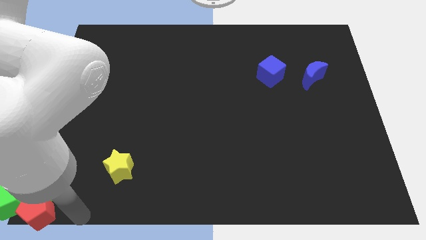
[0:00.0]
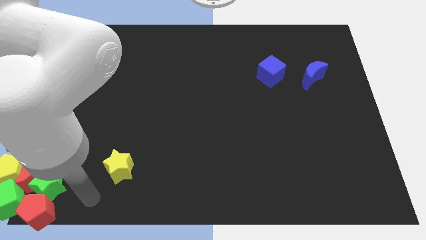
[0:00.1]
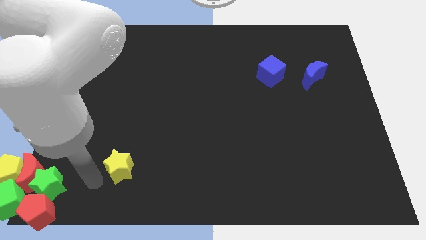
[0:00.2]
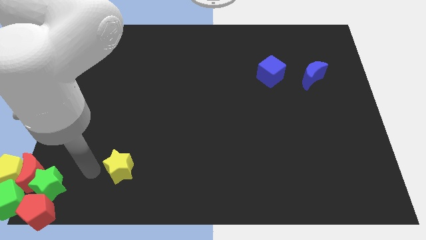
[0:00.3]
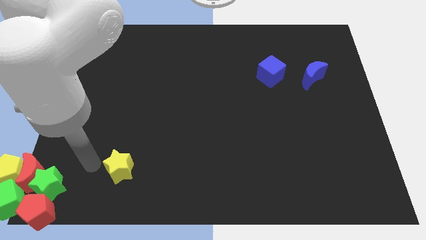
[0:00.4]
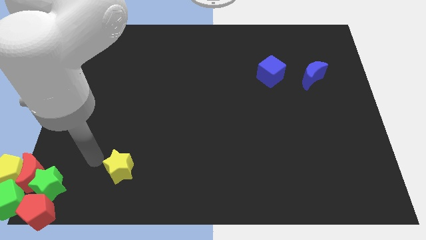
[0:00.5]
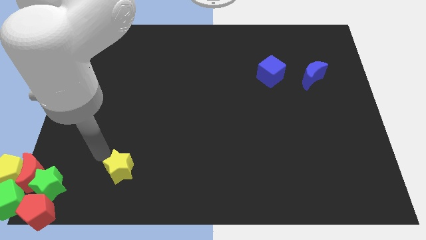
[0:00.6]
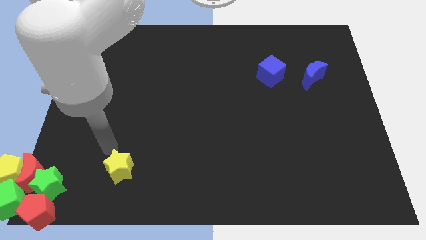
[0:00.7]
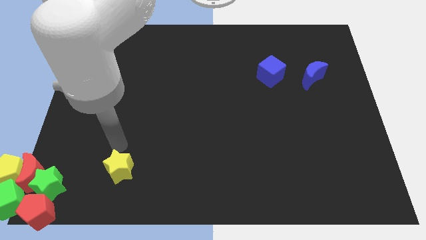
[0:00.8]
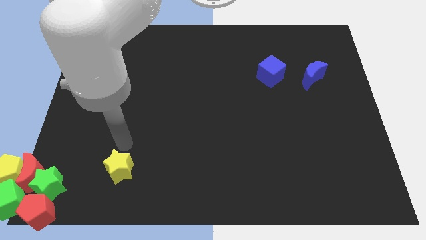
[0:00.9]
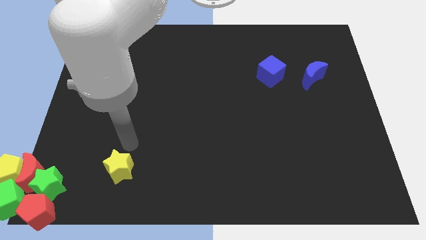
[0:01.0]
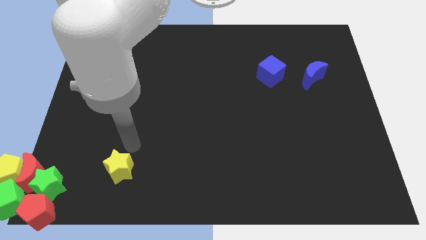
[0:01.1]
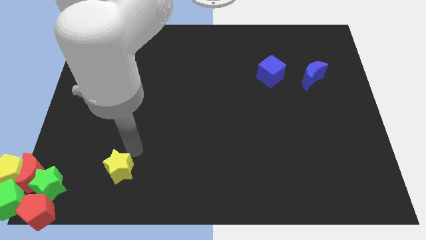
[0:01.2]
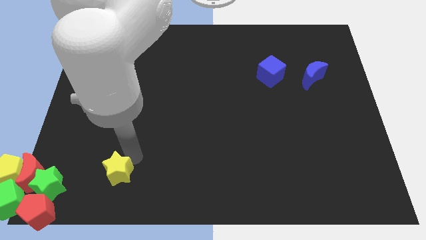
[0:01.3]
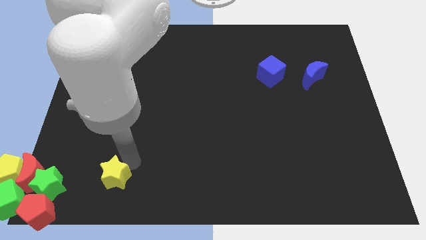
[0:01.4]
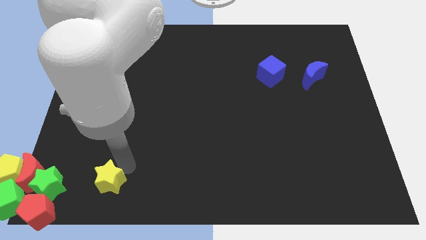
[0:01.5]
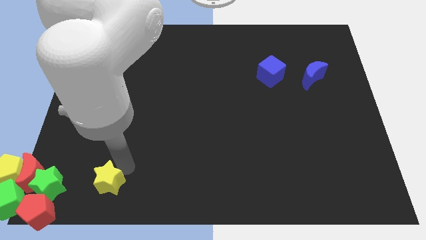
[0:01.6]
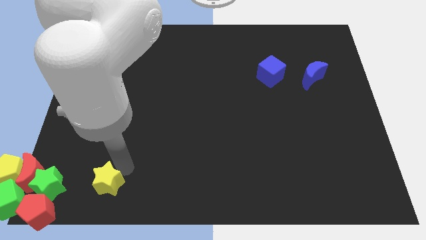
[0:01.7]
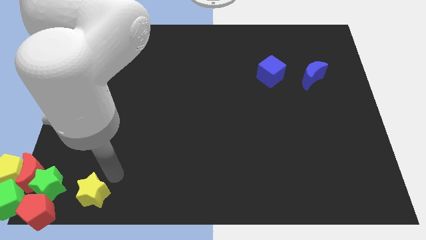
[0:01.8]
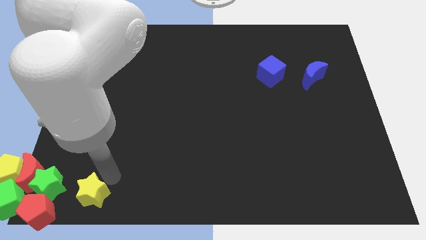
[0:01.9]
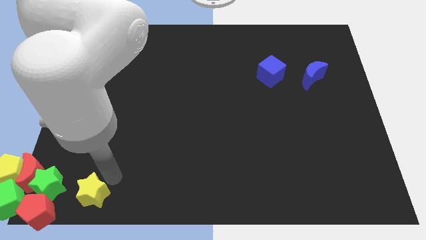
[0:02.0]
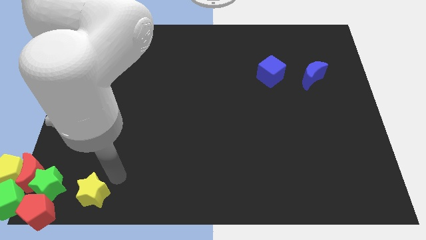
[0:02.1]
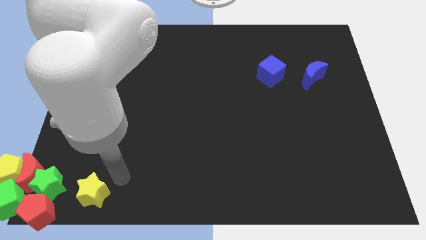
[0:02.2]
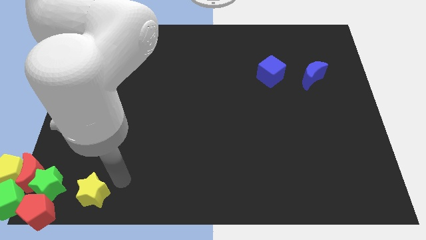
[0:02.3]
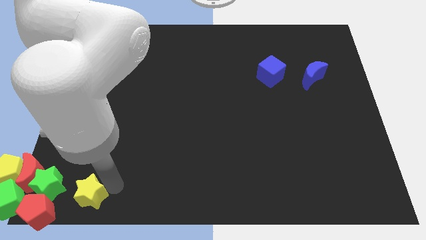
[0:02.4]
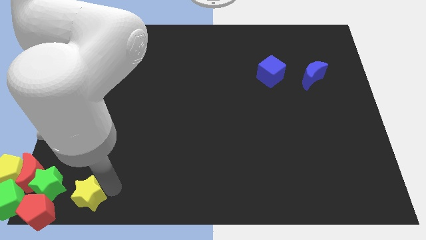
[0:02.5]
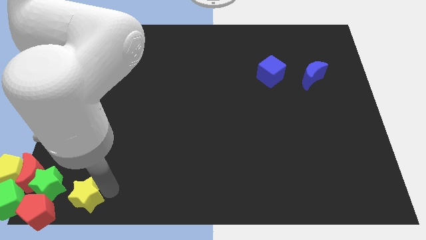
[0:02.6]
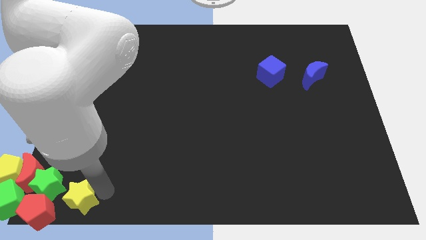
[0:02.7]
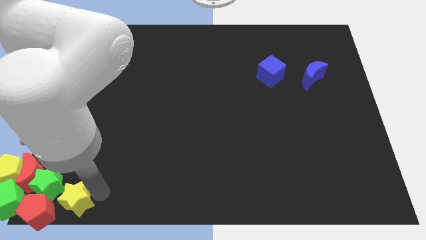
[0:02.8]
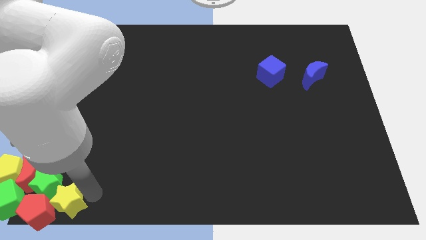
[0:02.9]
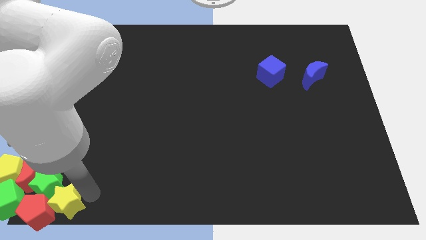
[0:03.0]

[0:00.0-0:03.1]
move the yellow star to the bottom left side blocks of the board

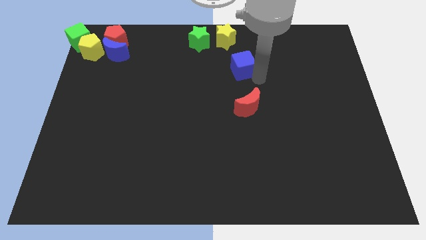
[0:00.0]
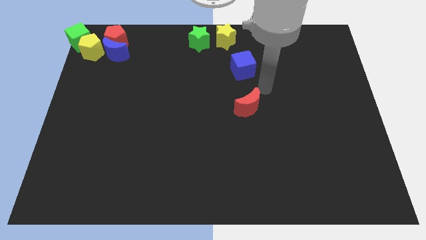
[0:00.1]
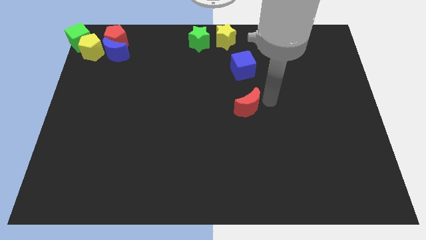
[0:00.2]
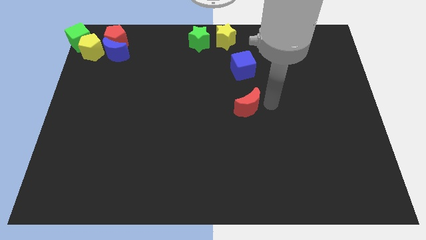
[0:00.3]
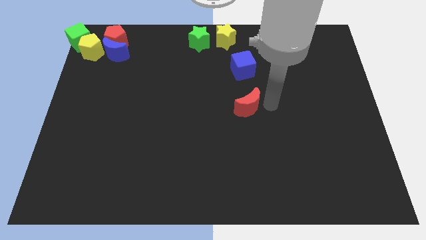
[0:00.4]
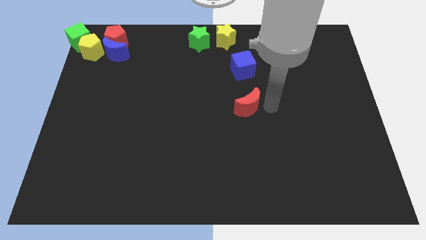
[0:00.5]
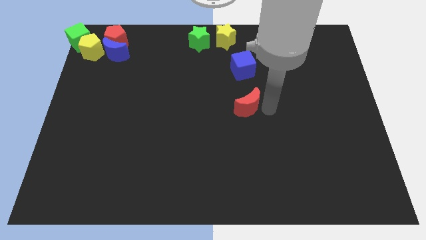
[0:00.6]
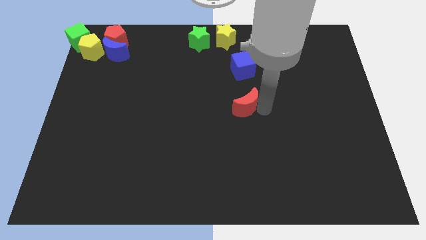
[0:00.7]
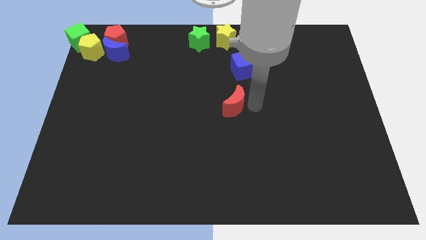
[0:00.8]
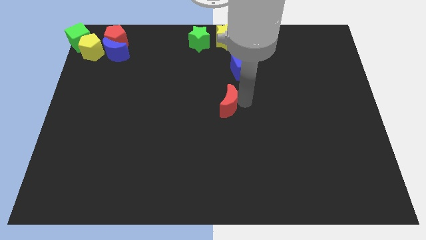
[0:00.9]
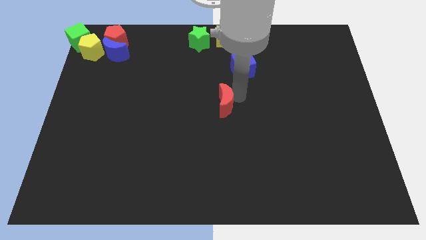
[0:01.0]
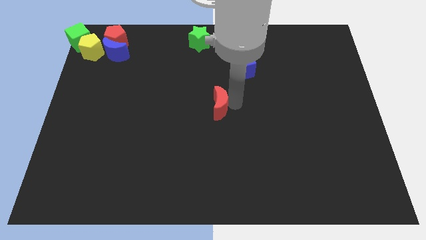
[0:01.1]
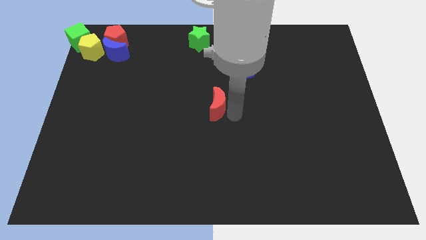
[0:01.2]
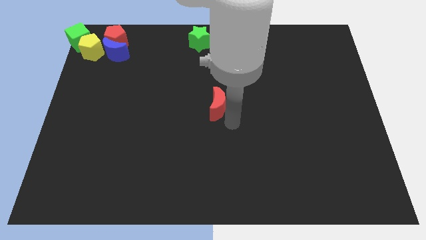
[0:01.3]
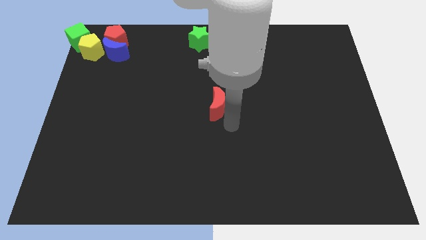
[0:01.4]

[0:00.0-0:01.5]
push the red crescent towards the centre of the board

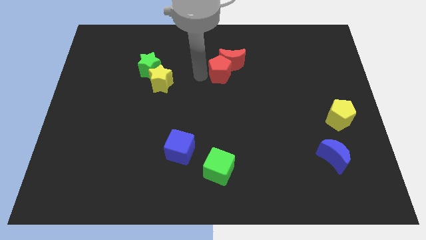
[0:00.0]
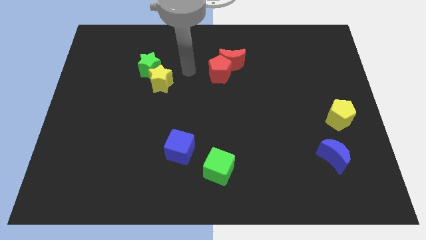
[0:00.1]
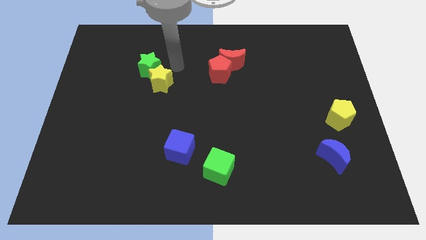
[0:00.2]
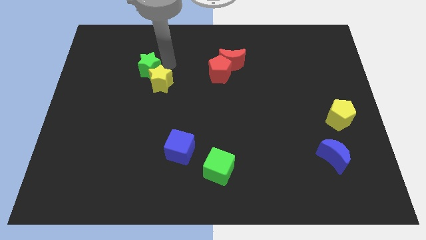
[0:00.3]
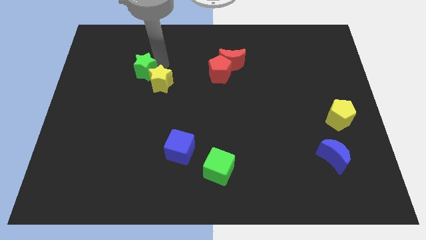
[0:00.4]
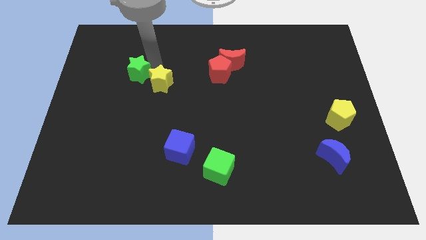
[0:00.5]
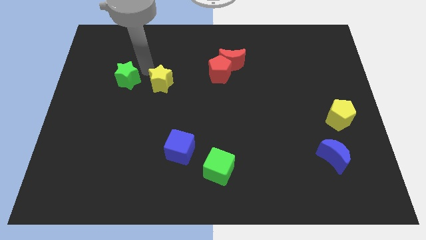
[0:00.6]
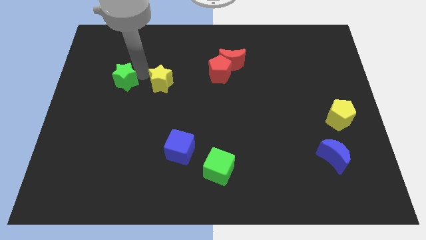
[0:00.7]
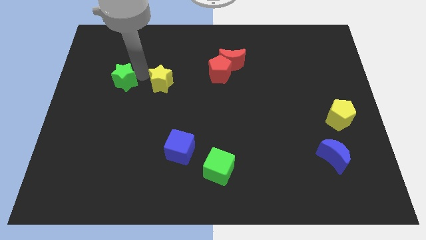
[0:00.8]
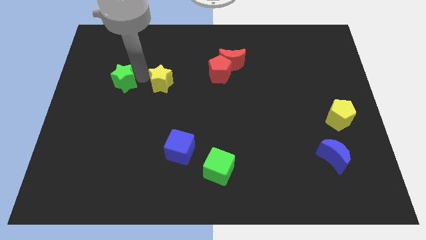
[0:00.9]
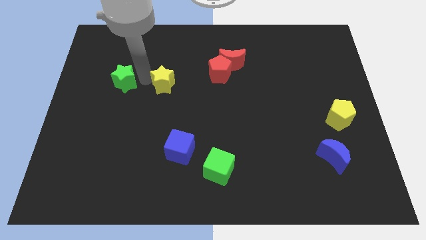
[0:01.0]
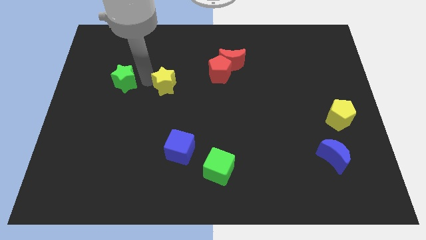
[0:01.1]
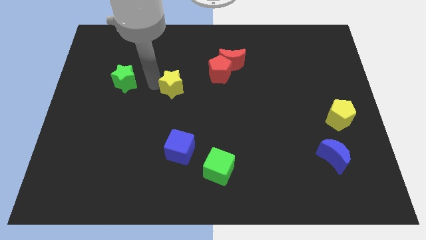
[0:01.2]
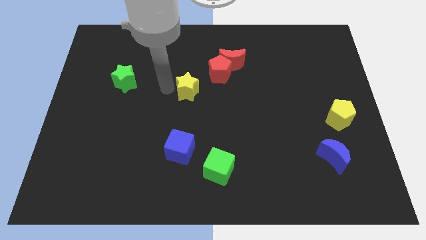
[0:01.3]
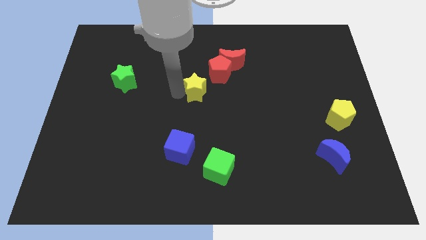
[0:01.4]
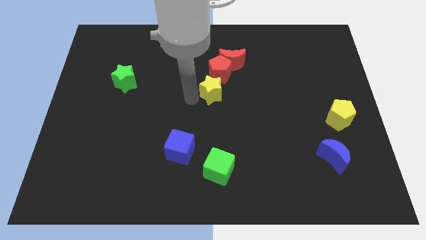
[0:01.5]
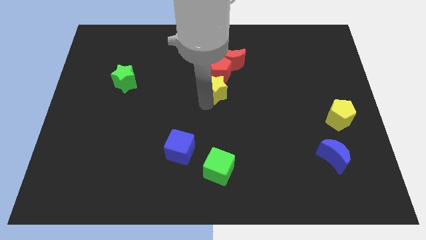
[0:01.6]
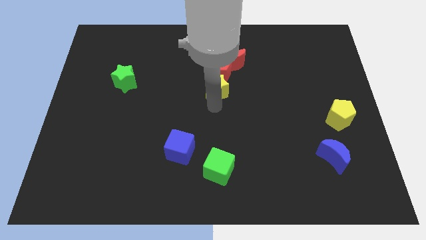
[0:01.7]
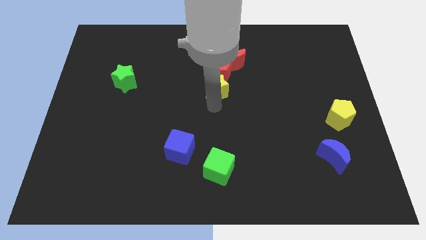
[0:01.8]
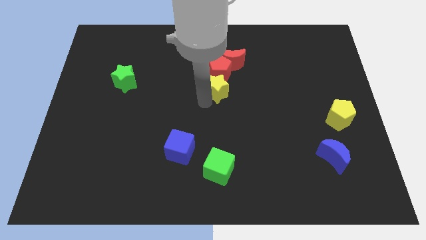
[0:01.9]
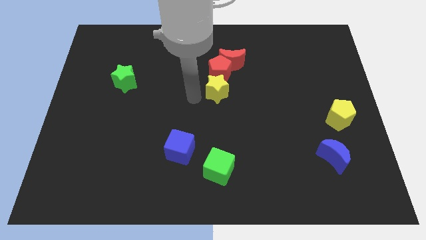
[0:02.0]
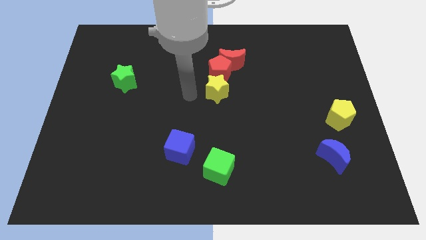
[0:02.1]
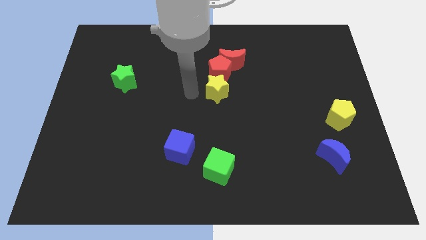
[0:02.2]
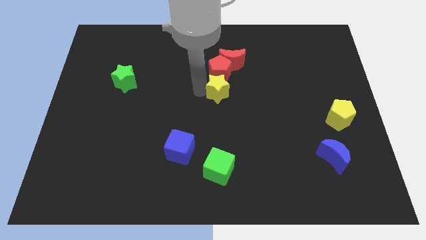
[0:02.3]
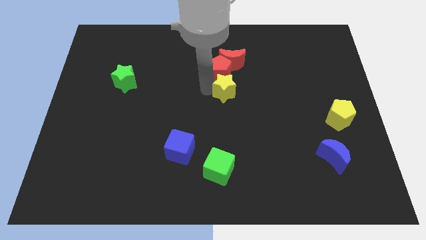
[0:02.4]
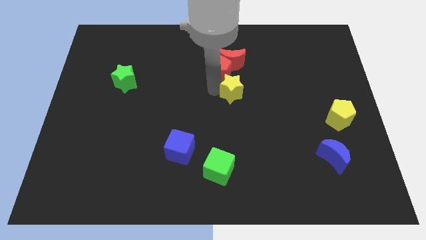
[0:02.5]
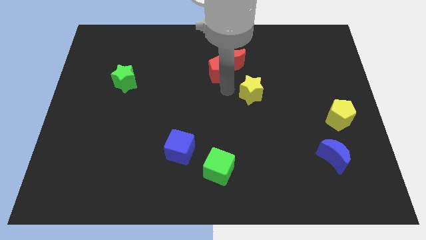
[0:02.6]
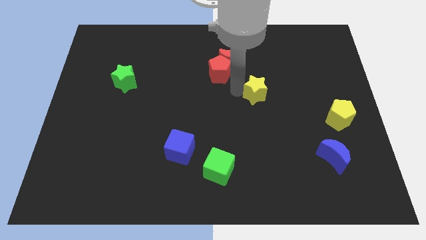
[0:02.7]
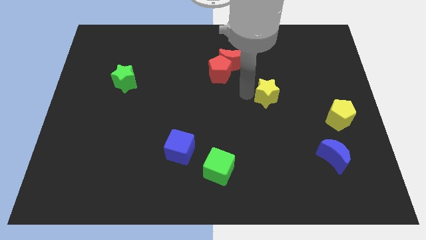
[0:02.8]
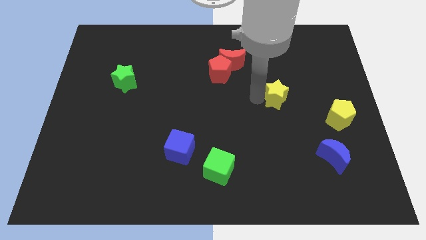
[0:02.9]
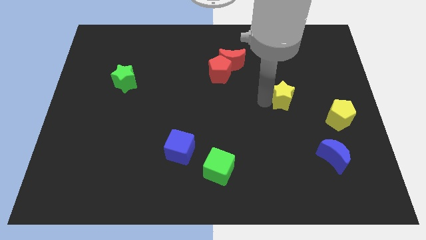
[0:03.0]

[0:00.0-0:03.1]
separate green star and the yellow star from each other

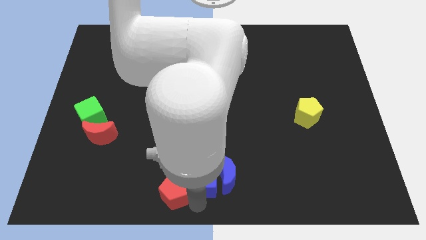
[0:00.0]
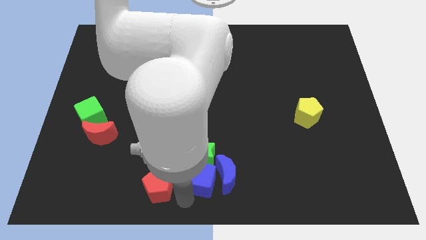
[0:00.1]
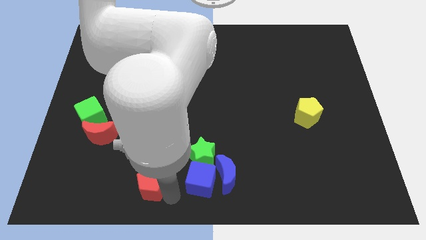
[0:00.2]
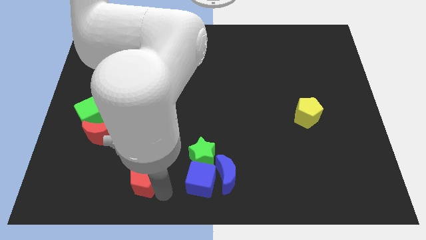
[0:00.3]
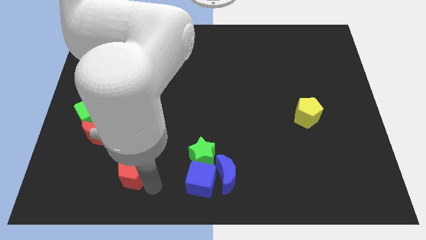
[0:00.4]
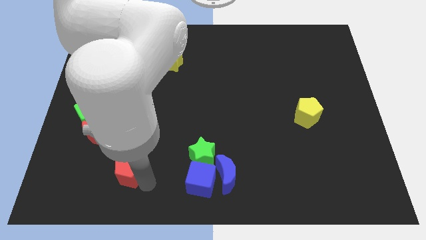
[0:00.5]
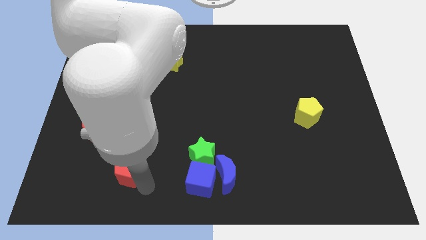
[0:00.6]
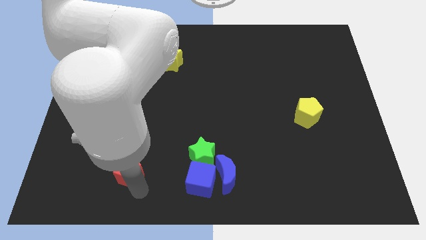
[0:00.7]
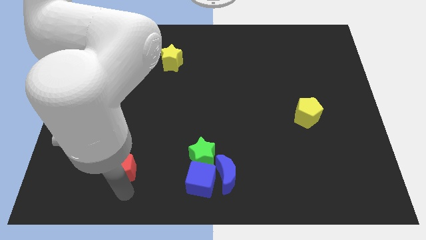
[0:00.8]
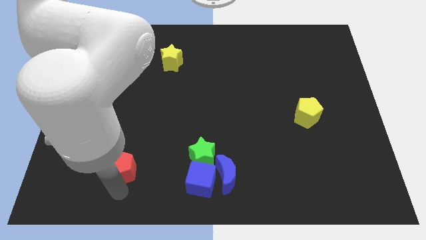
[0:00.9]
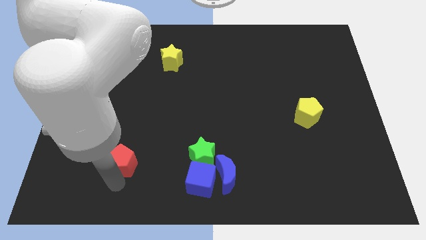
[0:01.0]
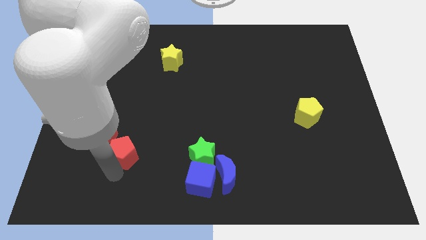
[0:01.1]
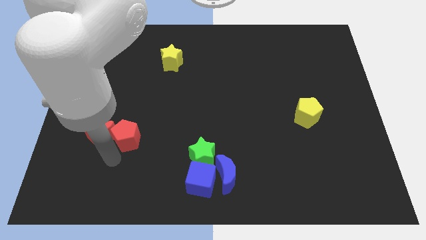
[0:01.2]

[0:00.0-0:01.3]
move the red pentagon away from the blue cube
